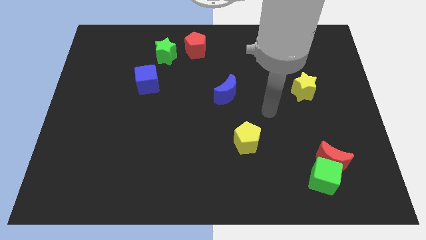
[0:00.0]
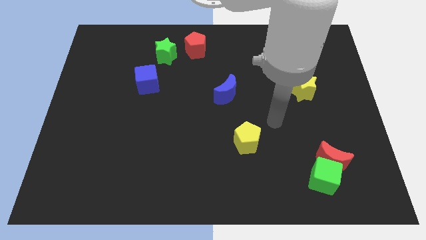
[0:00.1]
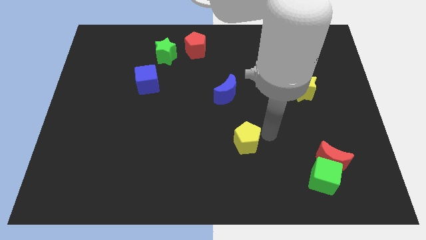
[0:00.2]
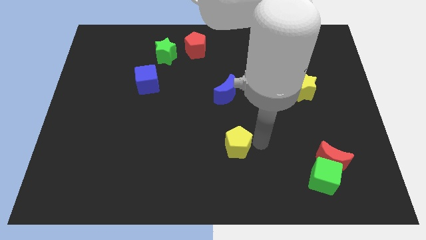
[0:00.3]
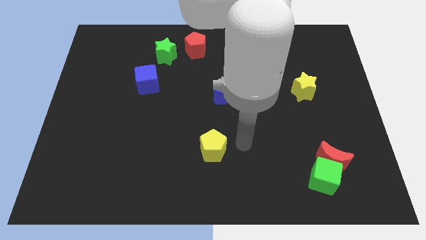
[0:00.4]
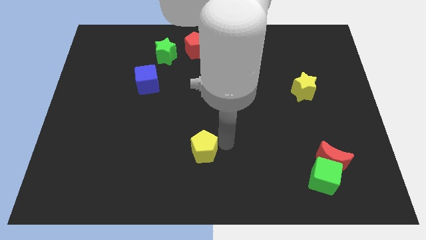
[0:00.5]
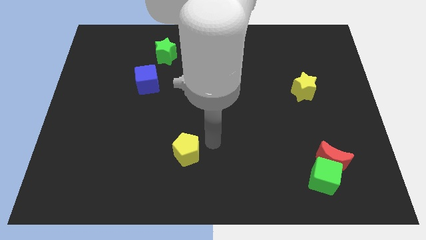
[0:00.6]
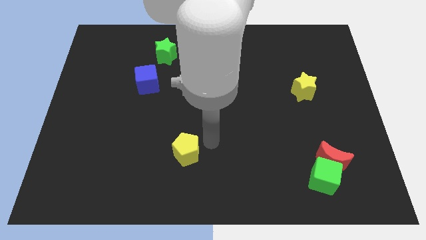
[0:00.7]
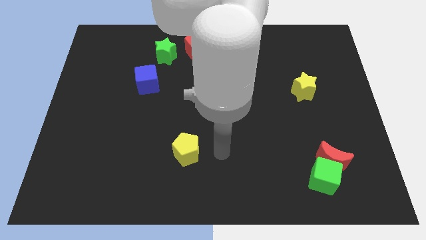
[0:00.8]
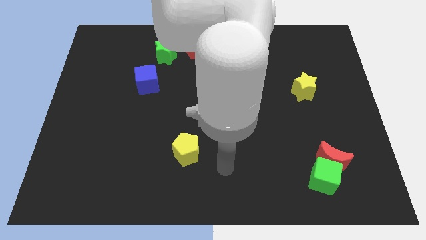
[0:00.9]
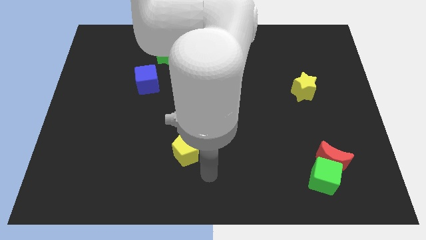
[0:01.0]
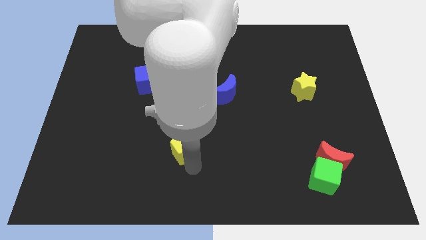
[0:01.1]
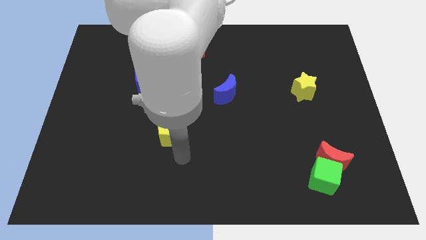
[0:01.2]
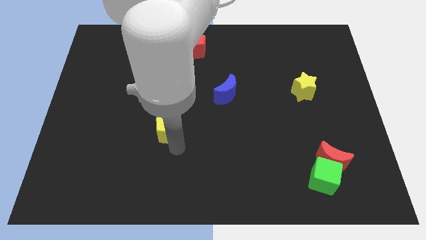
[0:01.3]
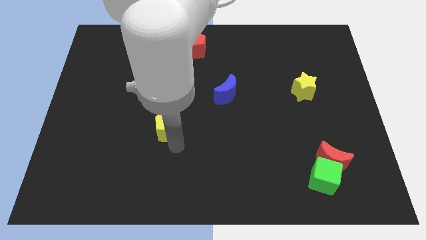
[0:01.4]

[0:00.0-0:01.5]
place the yellow pentagon towards the bottom side of the blue cube

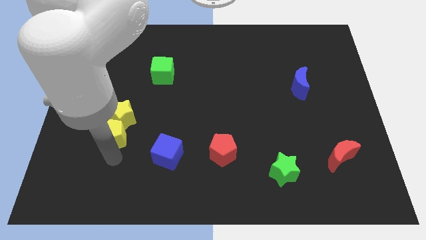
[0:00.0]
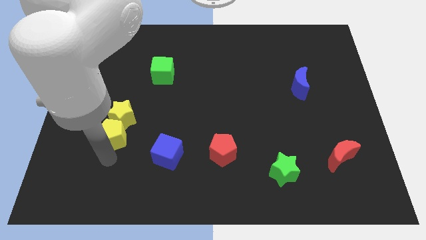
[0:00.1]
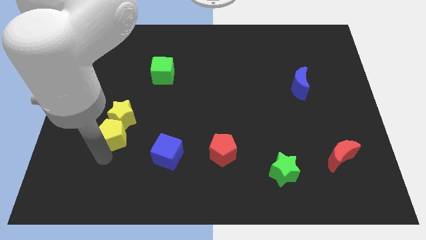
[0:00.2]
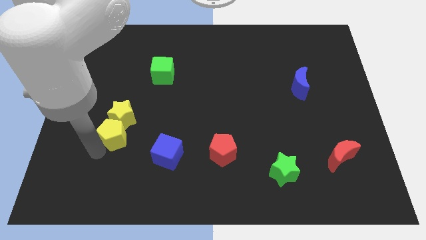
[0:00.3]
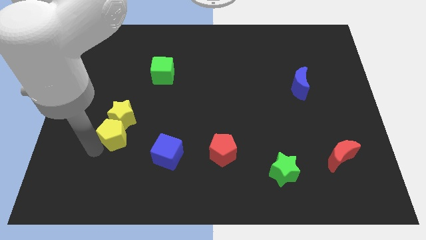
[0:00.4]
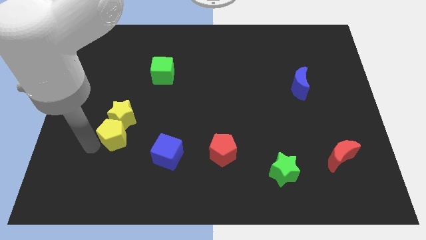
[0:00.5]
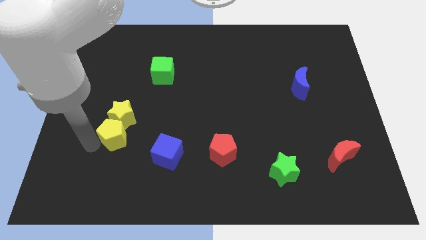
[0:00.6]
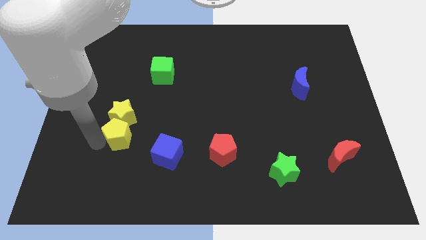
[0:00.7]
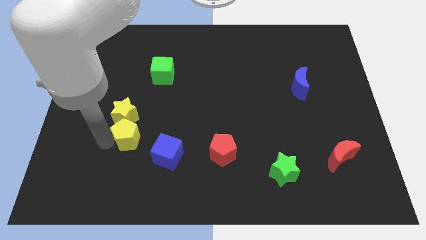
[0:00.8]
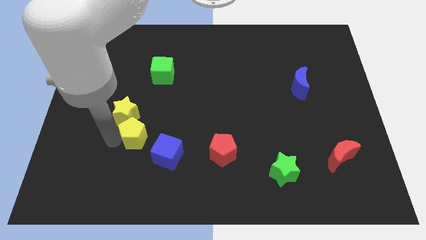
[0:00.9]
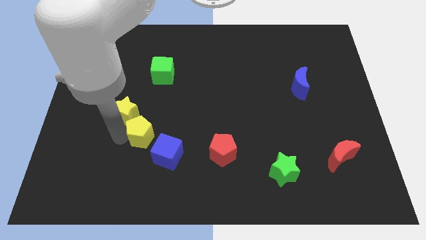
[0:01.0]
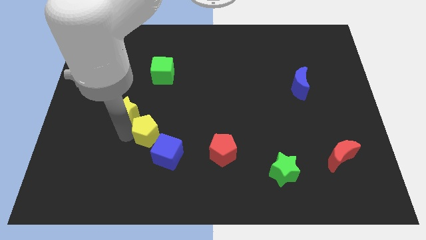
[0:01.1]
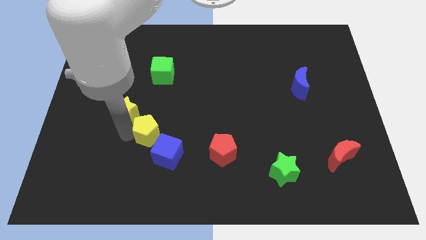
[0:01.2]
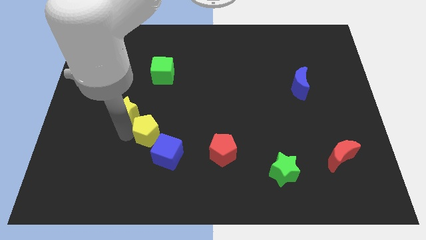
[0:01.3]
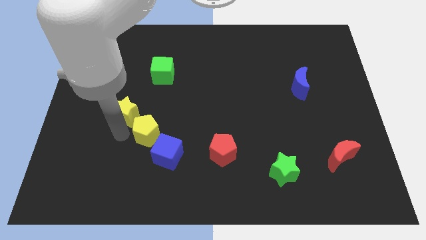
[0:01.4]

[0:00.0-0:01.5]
place the yellow pentagon at the top left of the blue cube

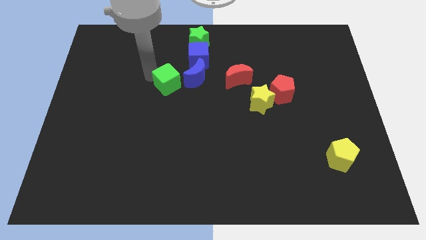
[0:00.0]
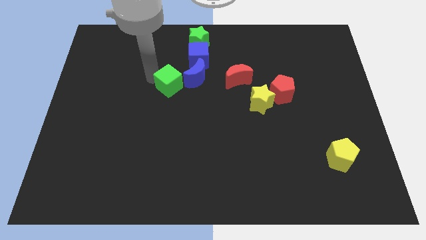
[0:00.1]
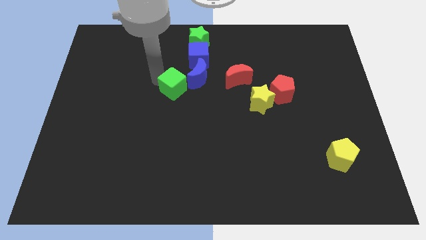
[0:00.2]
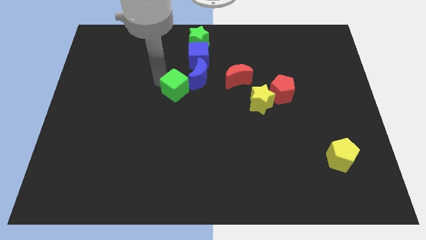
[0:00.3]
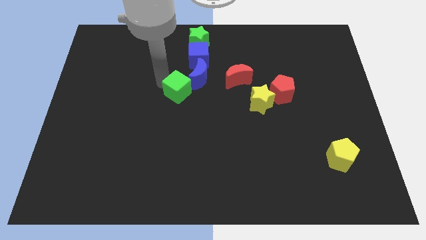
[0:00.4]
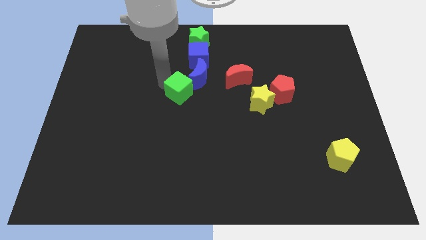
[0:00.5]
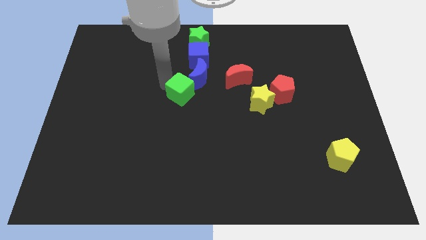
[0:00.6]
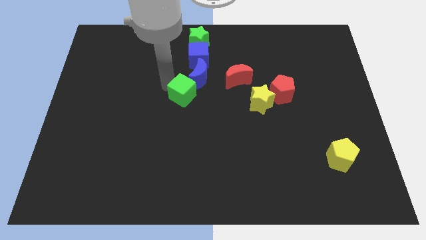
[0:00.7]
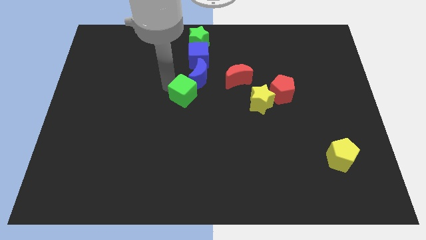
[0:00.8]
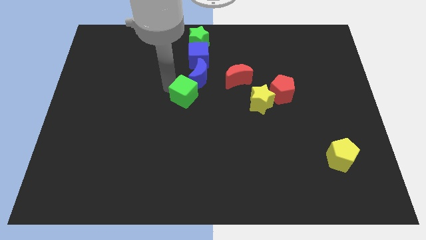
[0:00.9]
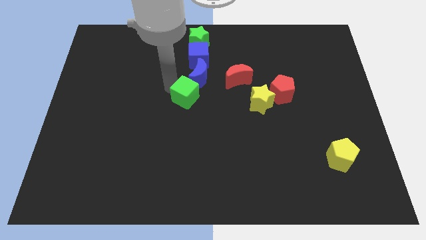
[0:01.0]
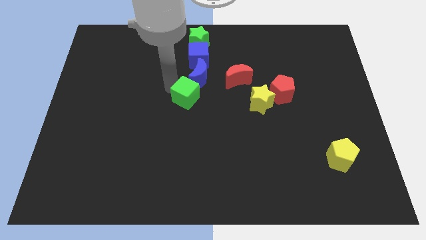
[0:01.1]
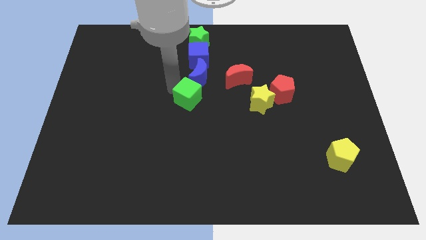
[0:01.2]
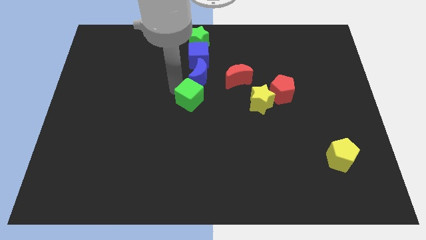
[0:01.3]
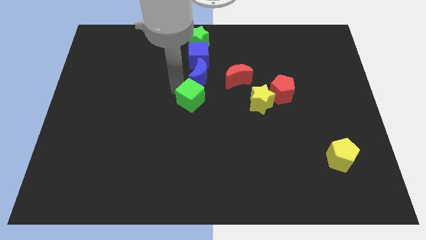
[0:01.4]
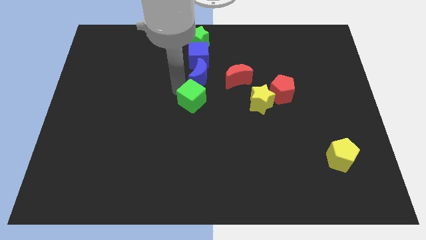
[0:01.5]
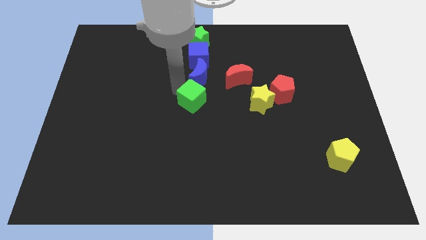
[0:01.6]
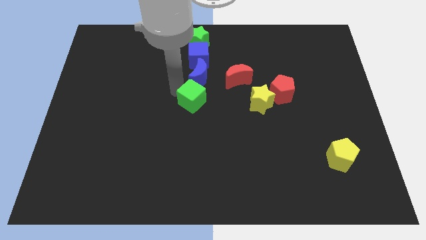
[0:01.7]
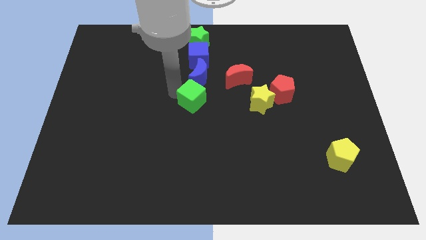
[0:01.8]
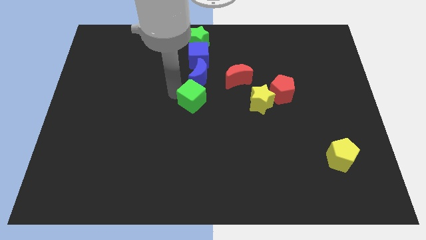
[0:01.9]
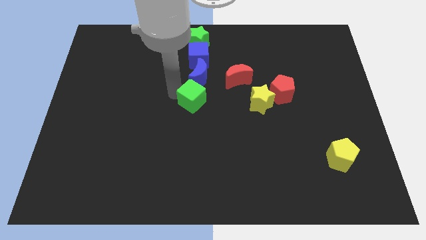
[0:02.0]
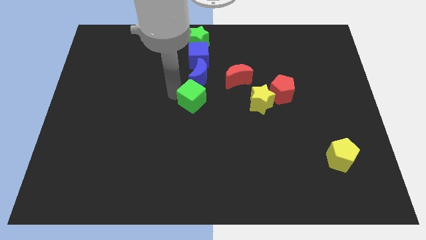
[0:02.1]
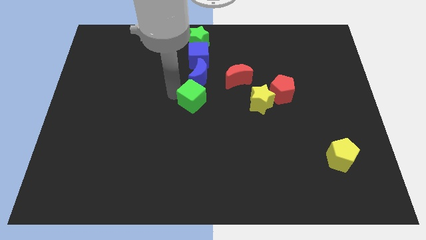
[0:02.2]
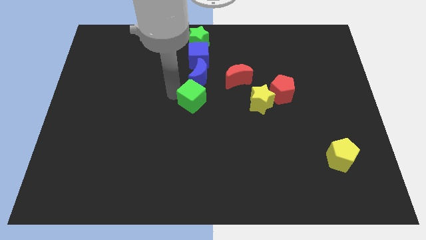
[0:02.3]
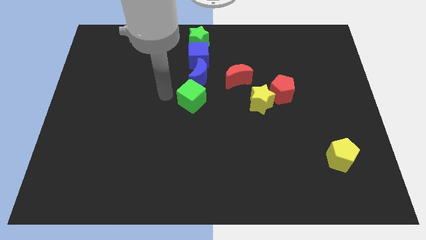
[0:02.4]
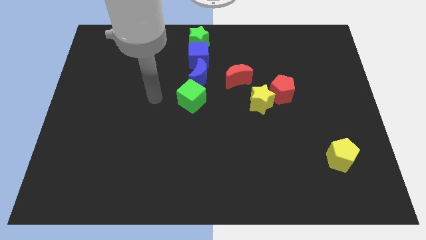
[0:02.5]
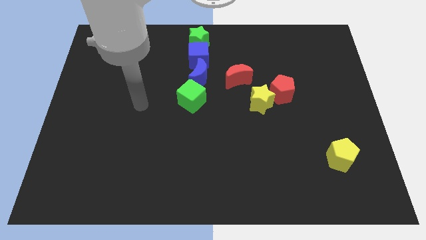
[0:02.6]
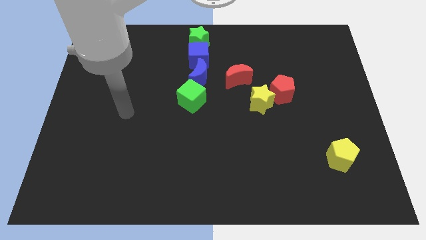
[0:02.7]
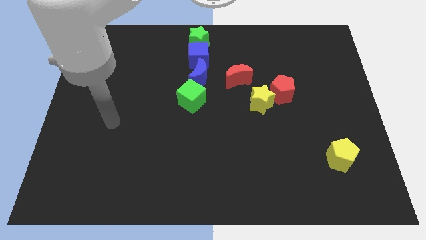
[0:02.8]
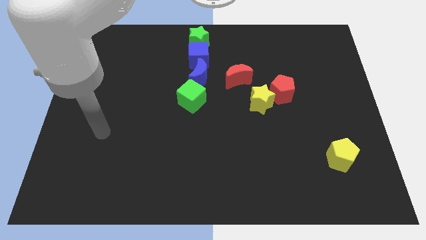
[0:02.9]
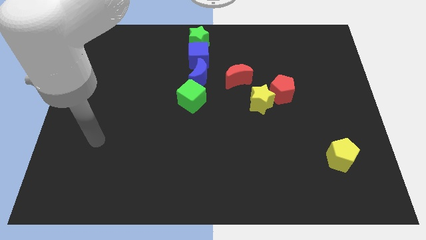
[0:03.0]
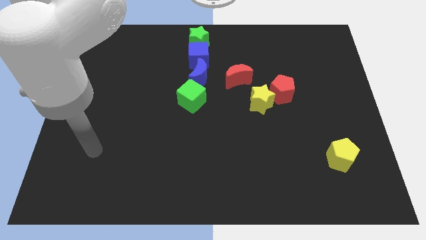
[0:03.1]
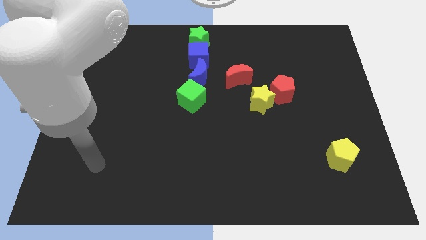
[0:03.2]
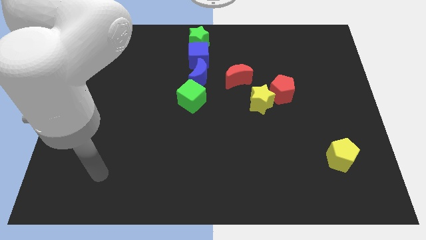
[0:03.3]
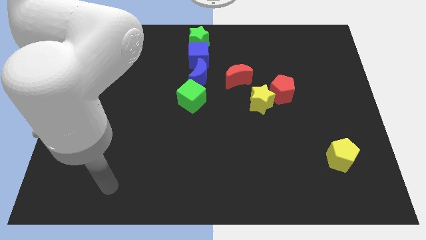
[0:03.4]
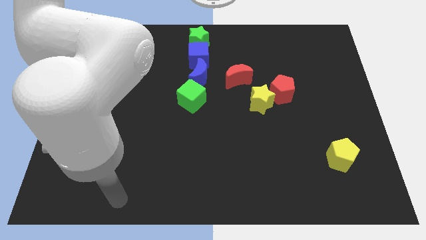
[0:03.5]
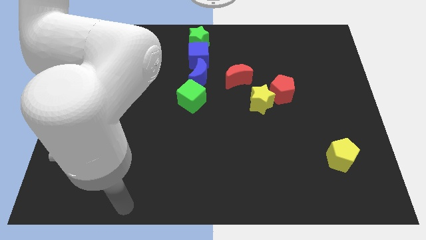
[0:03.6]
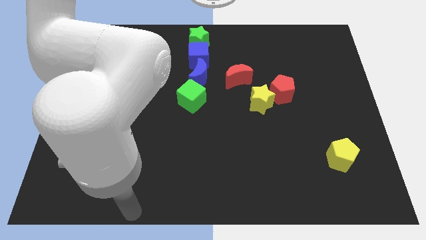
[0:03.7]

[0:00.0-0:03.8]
push green cube at center

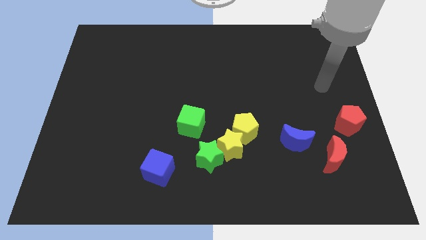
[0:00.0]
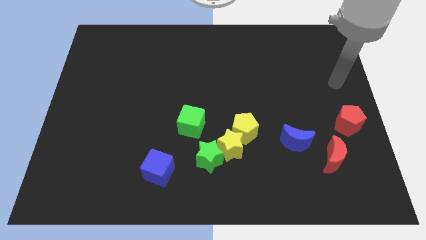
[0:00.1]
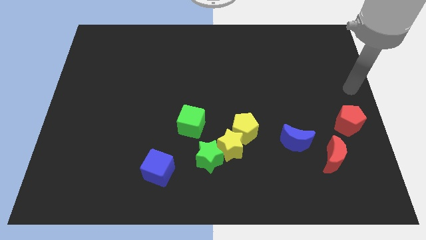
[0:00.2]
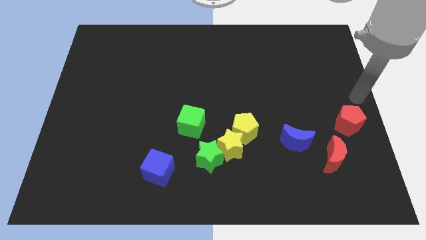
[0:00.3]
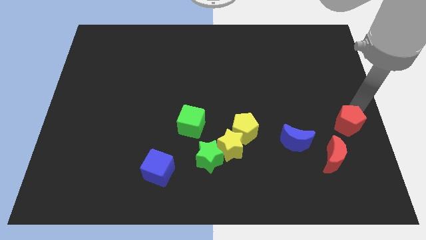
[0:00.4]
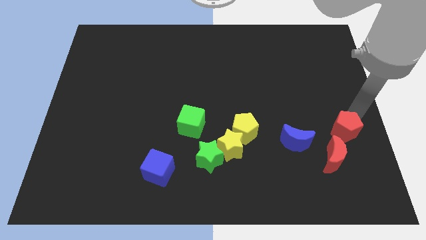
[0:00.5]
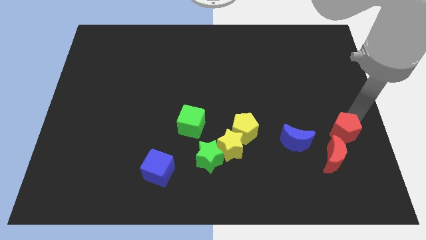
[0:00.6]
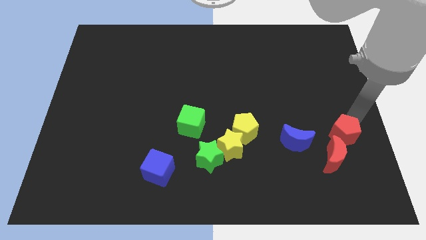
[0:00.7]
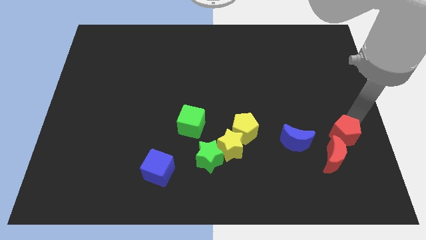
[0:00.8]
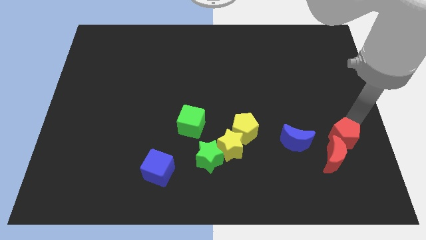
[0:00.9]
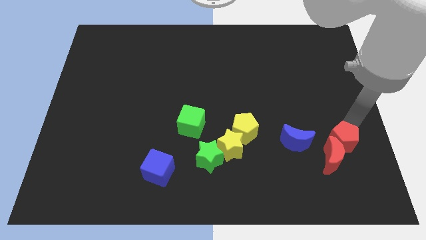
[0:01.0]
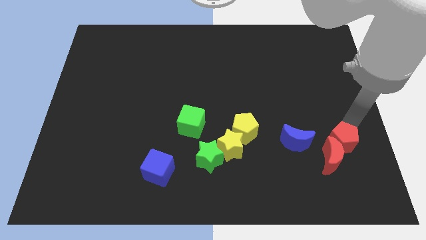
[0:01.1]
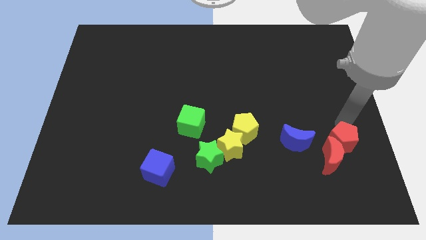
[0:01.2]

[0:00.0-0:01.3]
push the red pentagon into the red moon

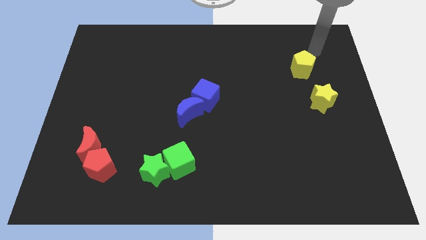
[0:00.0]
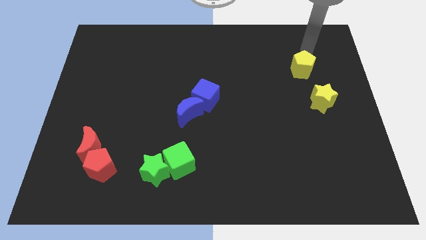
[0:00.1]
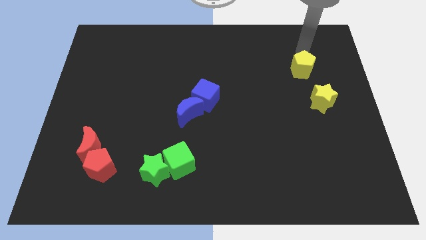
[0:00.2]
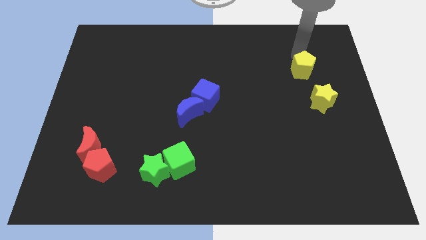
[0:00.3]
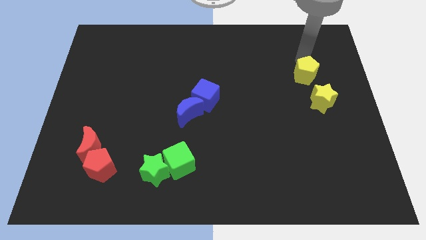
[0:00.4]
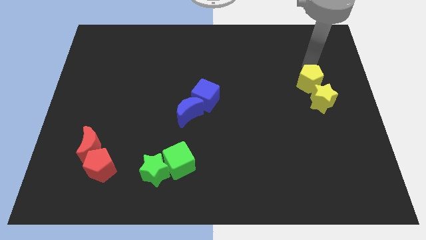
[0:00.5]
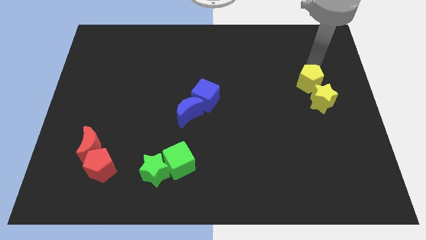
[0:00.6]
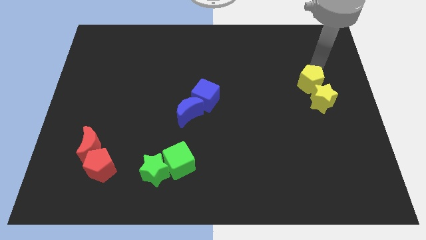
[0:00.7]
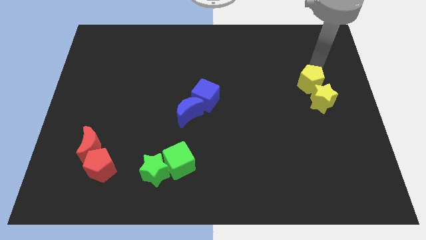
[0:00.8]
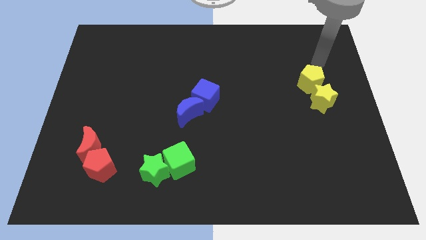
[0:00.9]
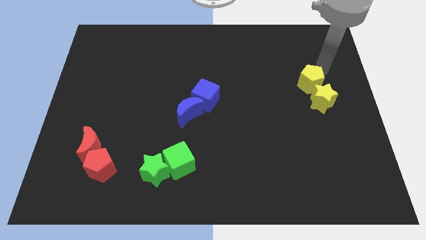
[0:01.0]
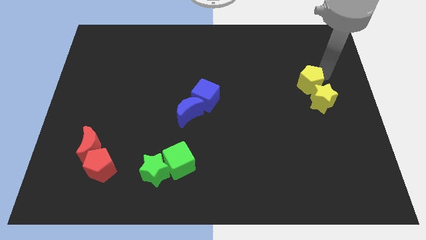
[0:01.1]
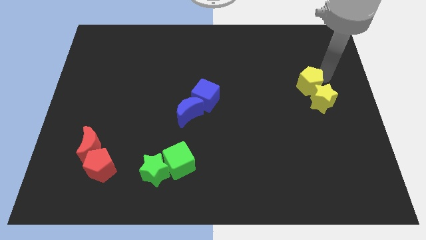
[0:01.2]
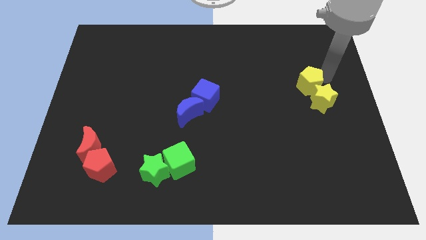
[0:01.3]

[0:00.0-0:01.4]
move the yellow pentagon into the yellow star
